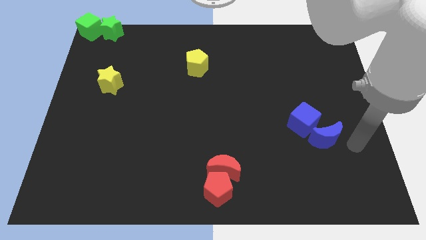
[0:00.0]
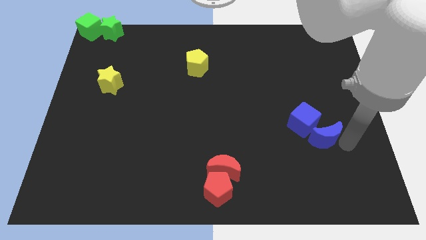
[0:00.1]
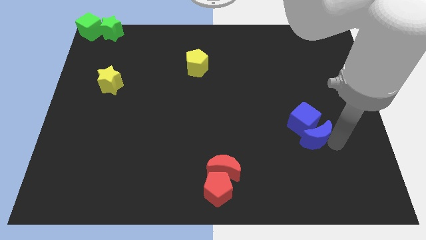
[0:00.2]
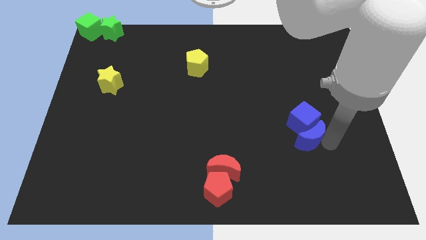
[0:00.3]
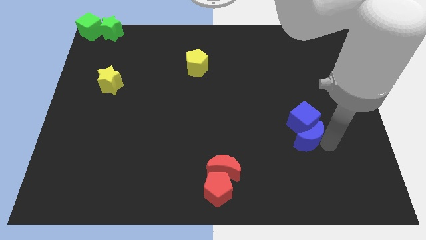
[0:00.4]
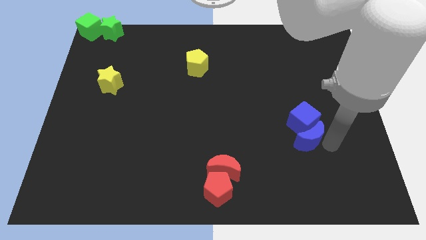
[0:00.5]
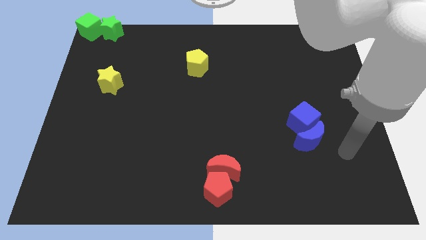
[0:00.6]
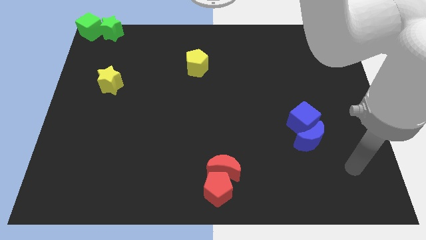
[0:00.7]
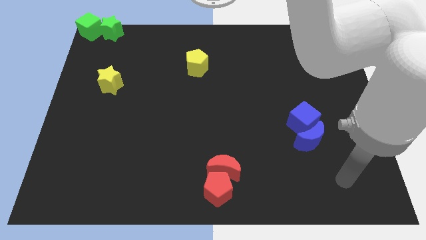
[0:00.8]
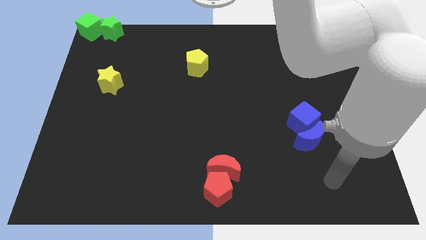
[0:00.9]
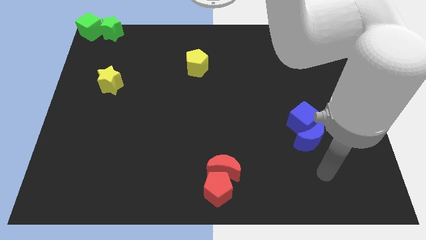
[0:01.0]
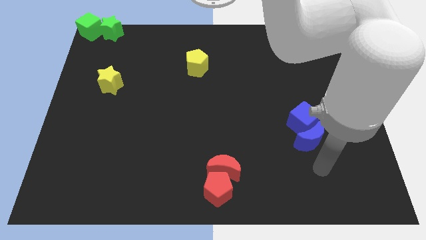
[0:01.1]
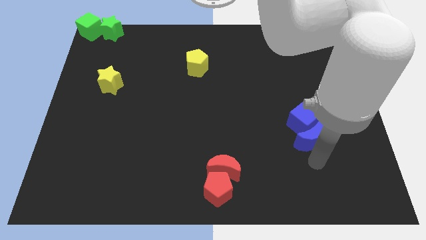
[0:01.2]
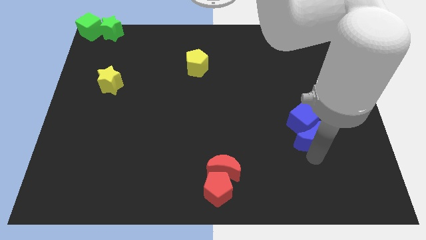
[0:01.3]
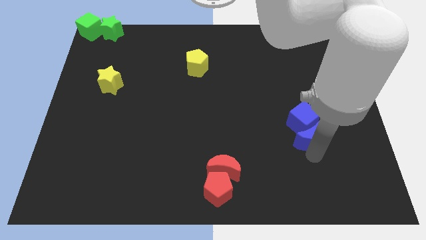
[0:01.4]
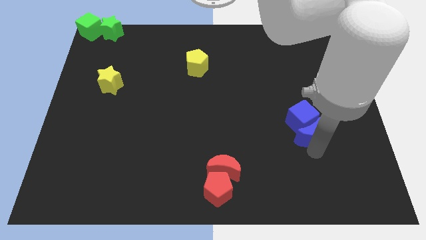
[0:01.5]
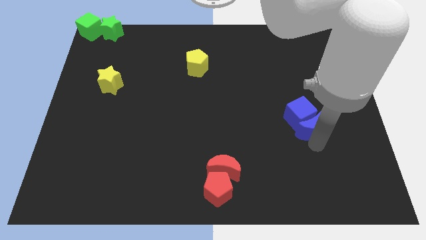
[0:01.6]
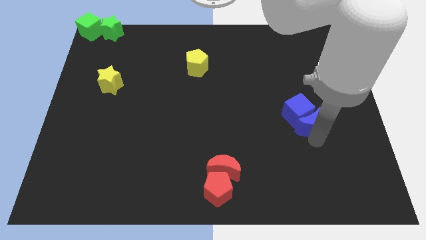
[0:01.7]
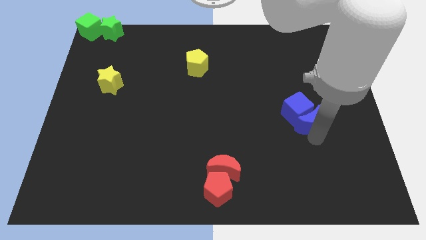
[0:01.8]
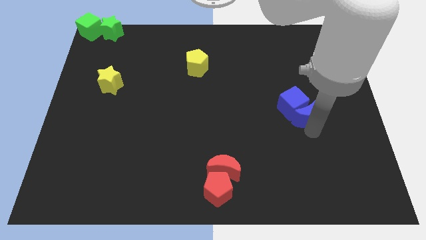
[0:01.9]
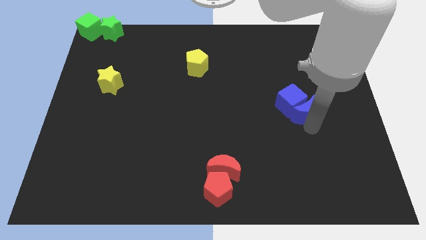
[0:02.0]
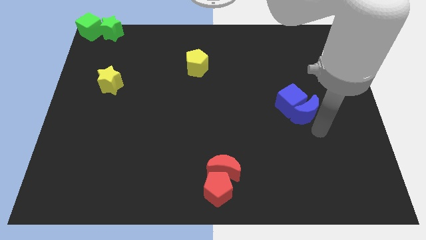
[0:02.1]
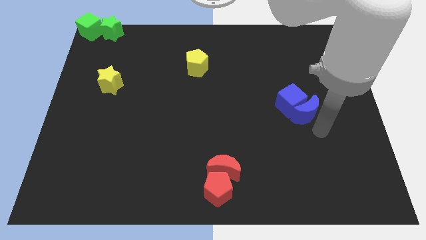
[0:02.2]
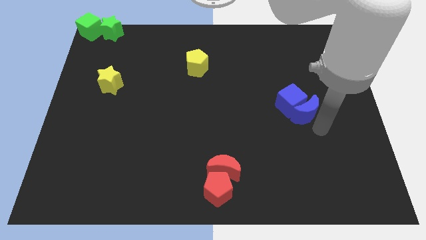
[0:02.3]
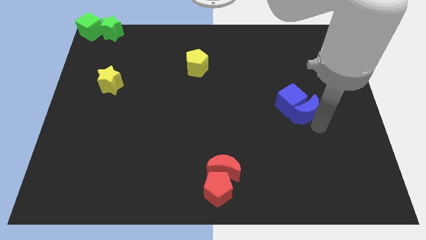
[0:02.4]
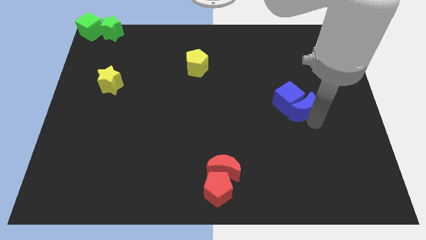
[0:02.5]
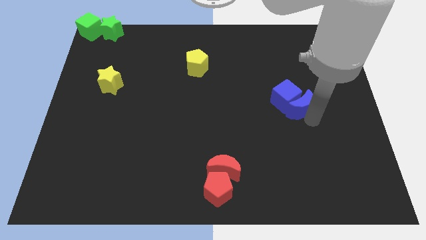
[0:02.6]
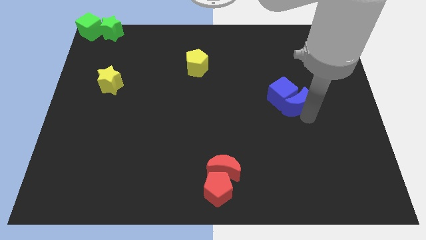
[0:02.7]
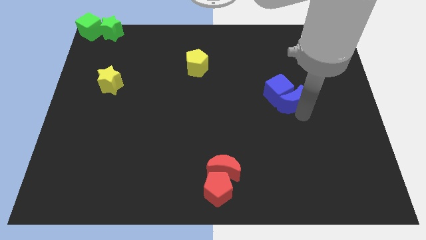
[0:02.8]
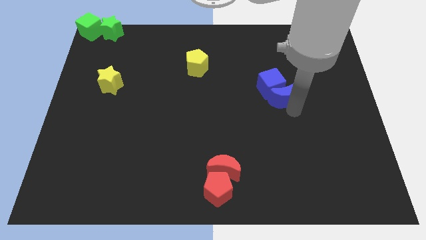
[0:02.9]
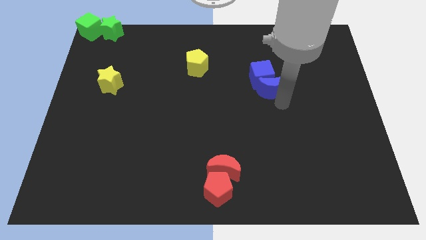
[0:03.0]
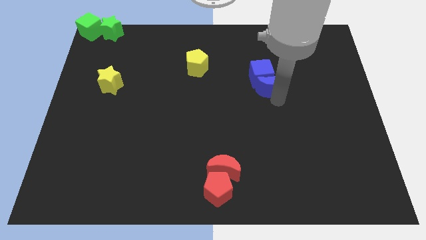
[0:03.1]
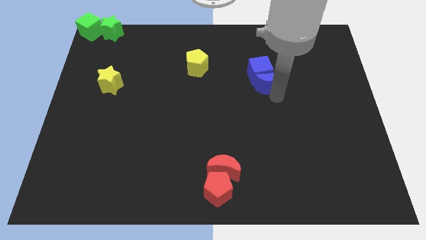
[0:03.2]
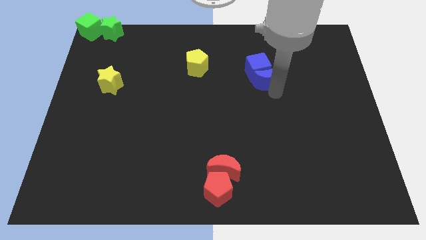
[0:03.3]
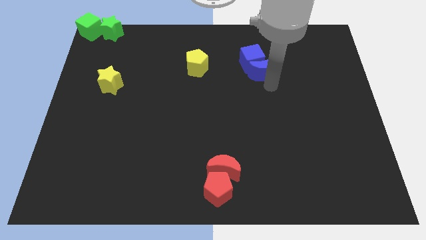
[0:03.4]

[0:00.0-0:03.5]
push both the blue blocks to the right side of the yellow pentagon

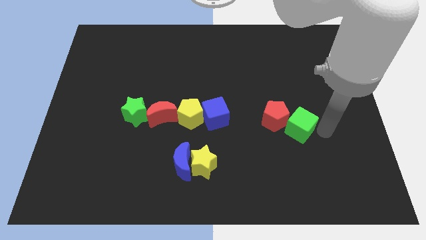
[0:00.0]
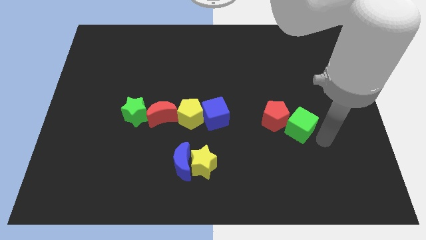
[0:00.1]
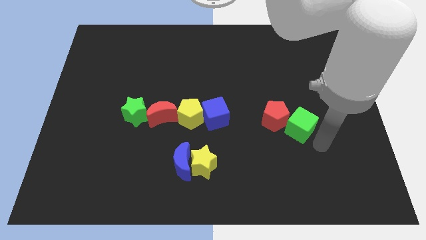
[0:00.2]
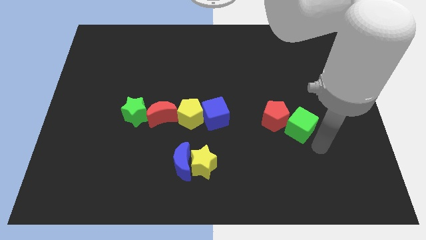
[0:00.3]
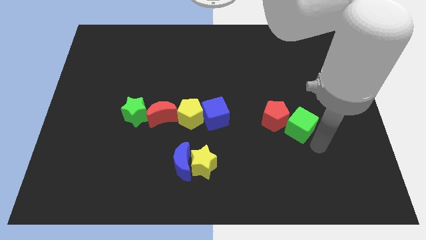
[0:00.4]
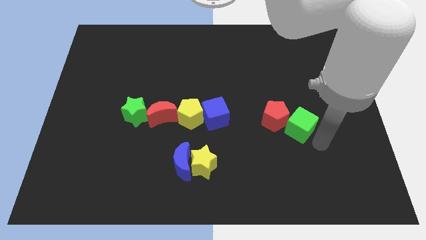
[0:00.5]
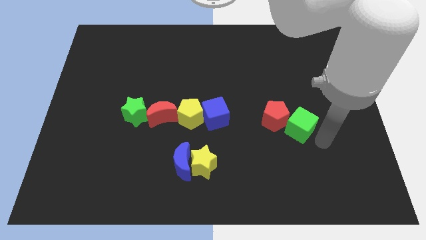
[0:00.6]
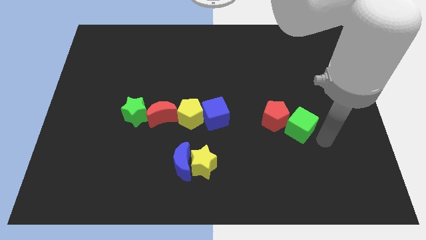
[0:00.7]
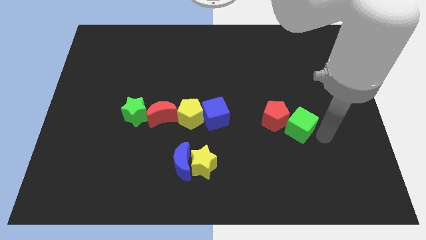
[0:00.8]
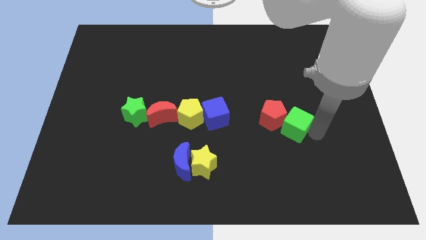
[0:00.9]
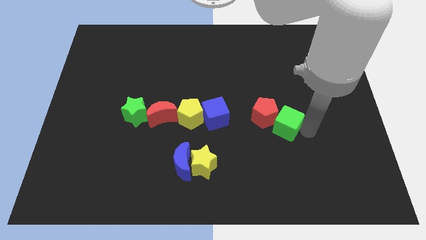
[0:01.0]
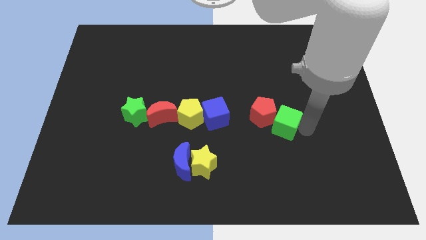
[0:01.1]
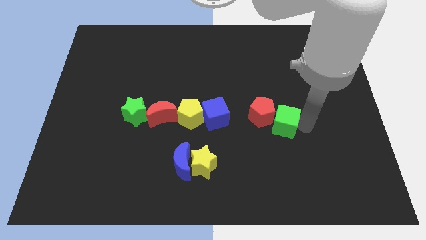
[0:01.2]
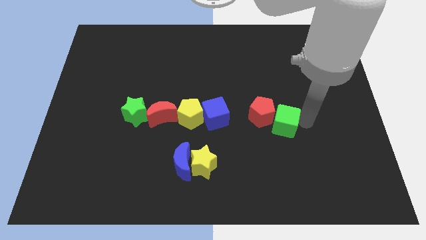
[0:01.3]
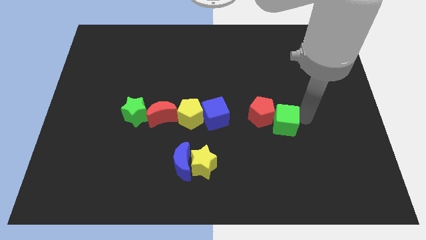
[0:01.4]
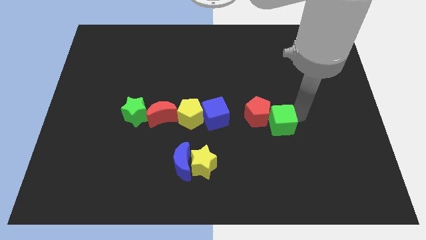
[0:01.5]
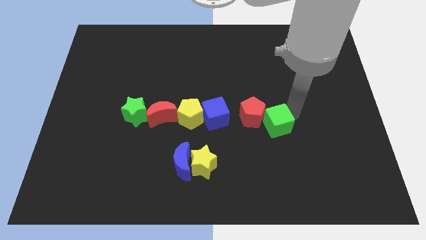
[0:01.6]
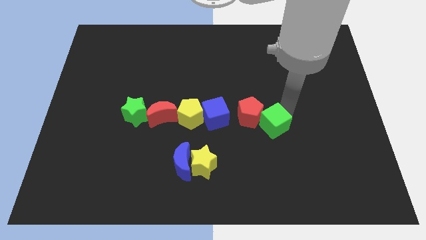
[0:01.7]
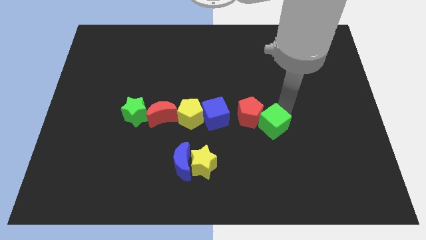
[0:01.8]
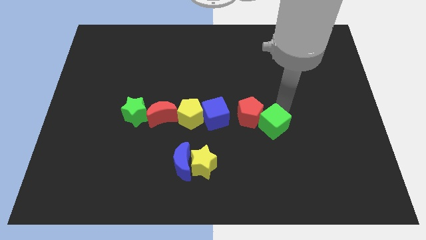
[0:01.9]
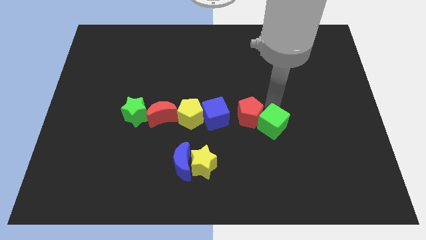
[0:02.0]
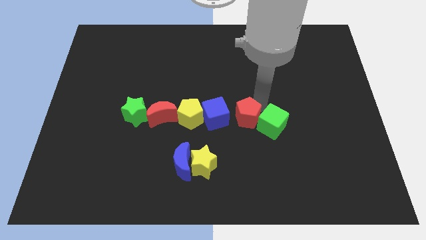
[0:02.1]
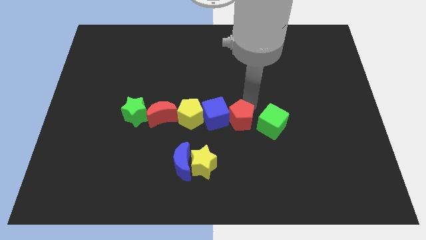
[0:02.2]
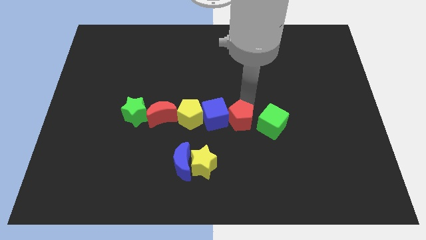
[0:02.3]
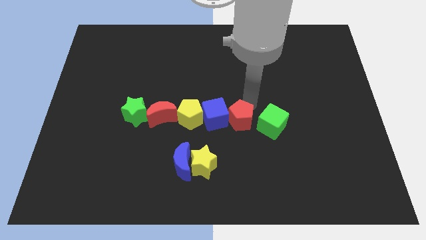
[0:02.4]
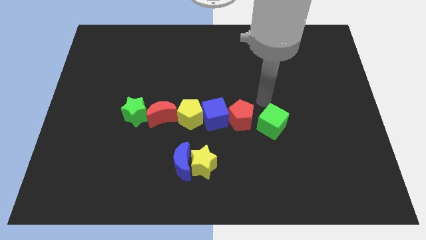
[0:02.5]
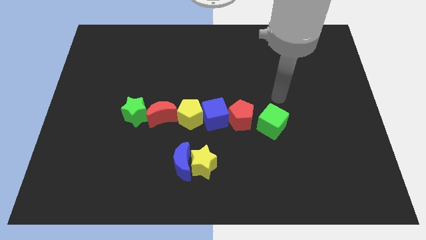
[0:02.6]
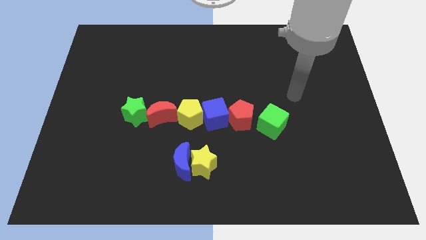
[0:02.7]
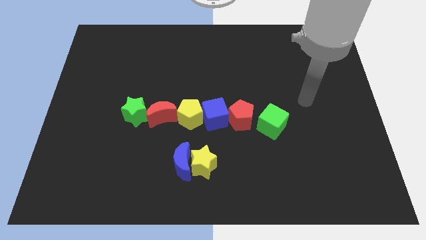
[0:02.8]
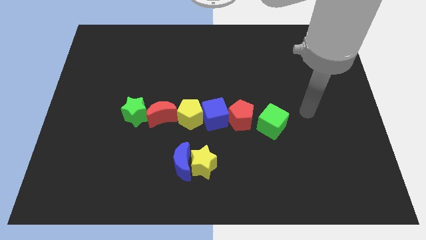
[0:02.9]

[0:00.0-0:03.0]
push red pentagon and green cube towards other blocks

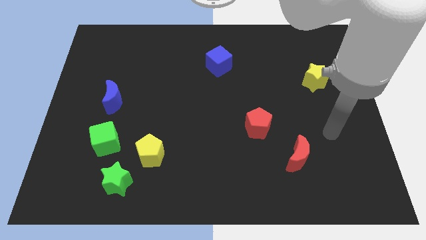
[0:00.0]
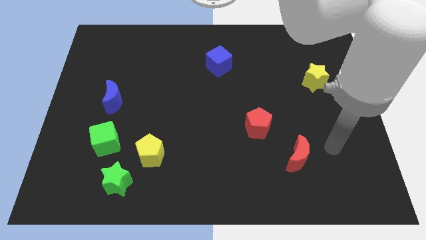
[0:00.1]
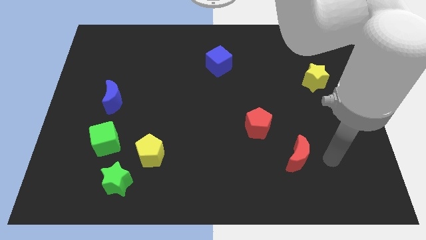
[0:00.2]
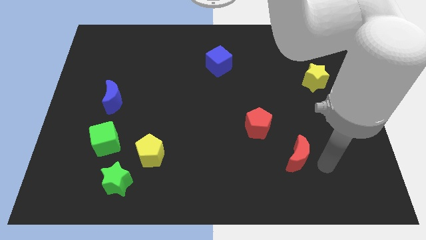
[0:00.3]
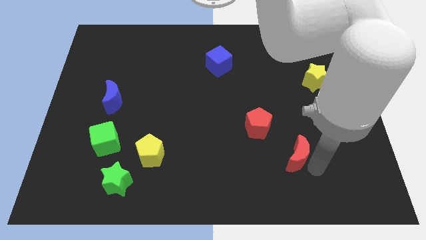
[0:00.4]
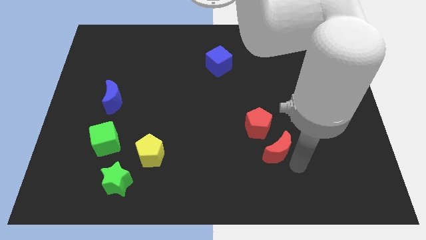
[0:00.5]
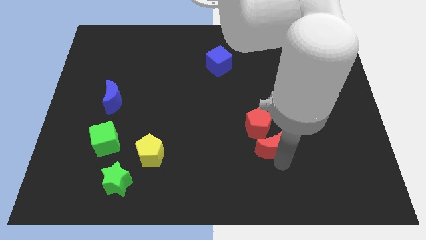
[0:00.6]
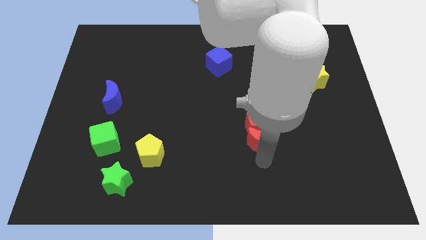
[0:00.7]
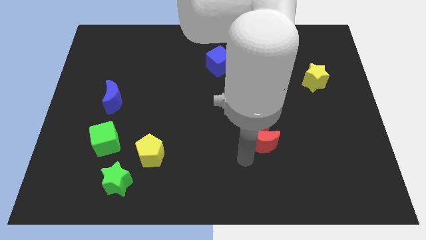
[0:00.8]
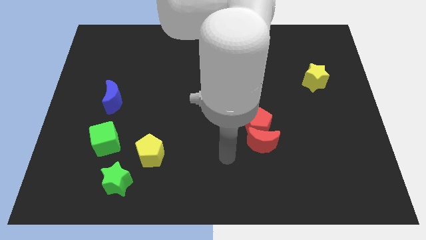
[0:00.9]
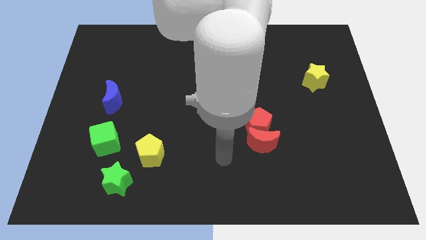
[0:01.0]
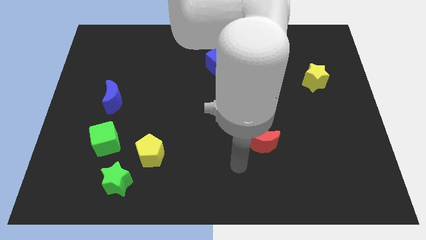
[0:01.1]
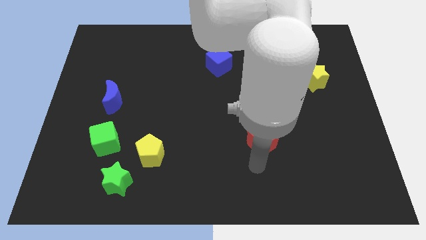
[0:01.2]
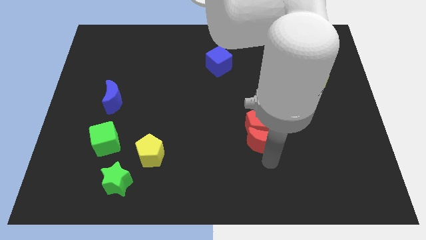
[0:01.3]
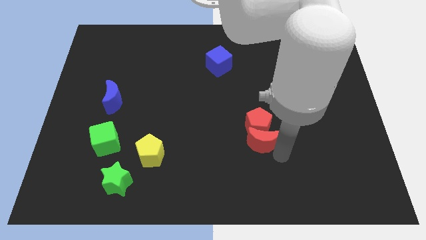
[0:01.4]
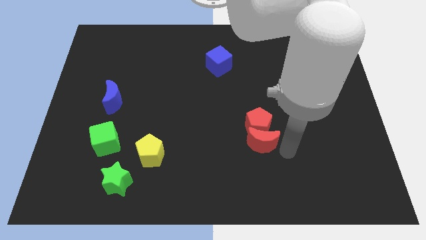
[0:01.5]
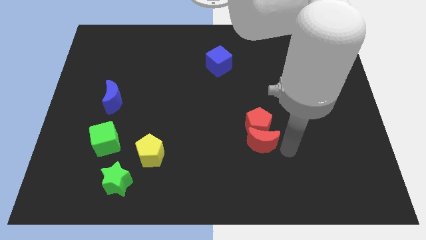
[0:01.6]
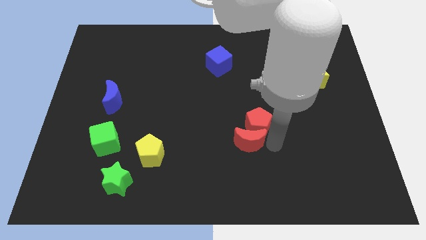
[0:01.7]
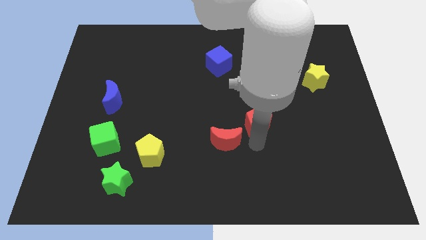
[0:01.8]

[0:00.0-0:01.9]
move the red crescent below the red pentagon

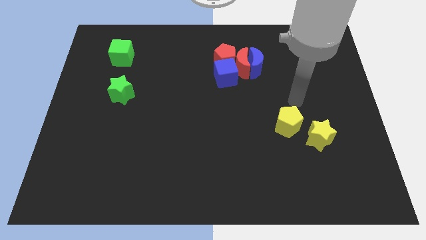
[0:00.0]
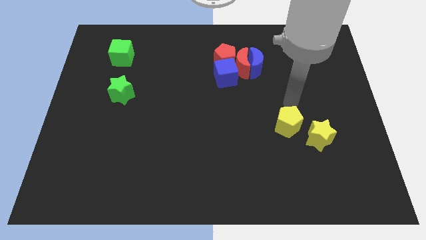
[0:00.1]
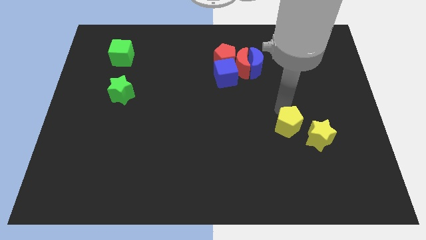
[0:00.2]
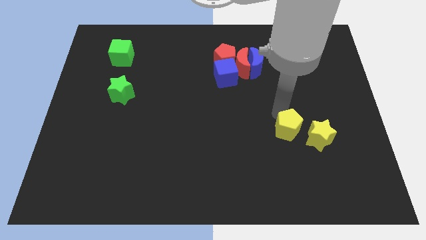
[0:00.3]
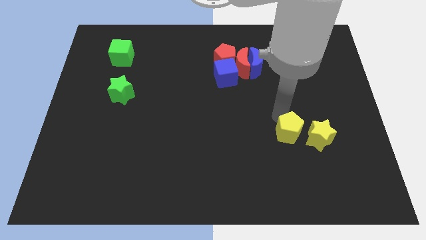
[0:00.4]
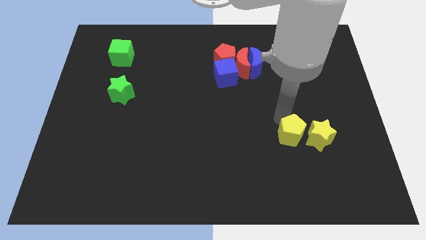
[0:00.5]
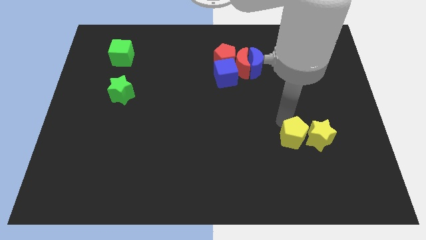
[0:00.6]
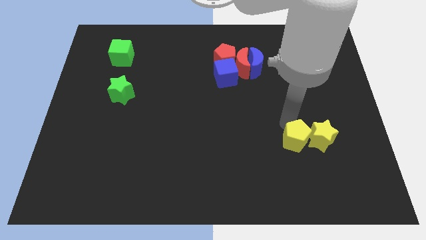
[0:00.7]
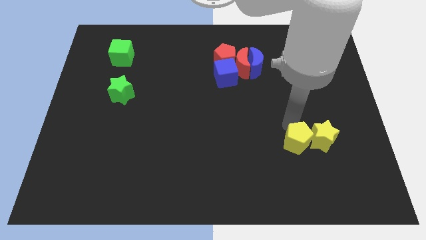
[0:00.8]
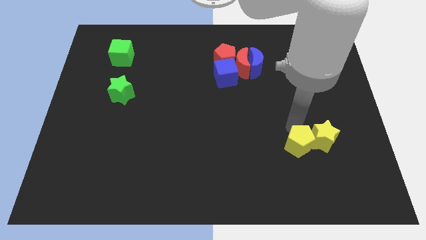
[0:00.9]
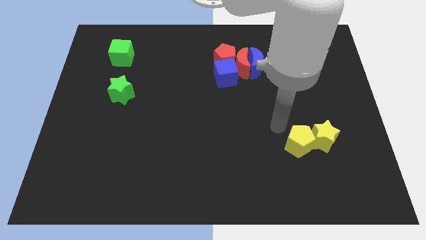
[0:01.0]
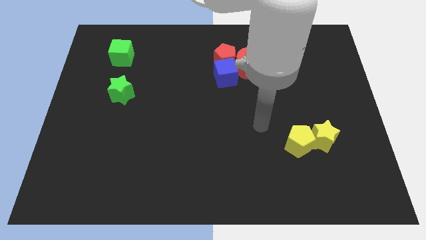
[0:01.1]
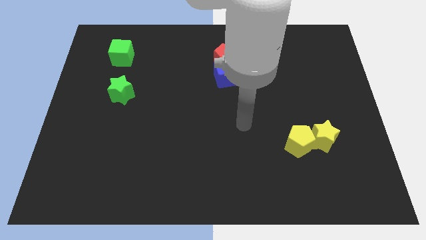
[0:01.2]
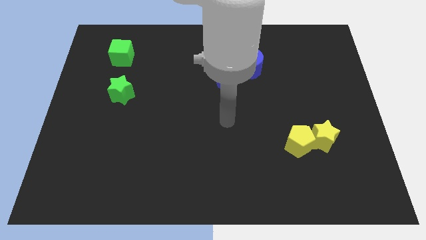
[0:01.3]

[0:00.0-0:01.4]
push the yellow pentagon to the left side the yellow star
